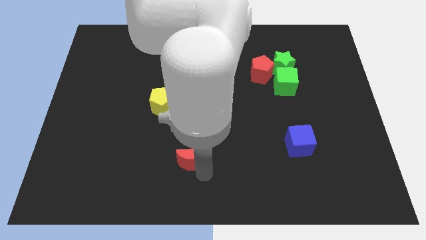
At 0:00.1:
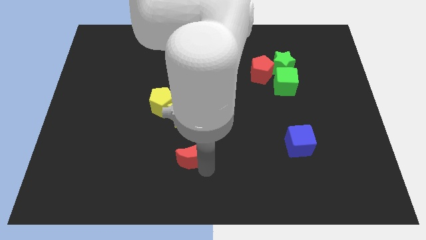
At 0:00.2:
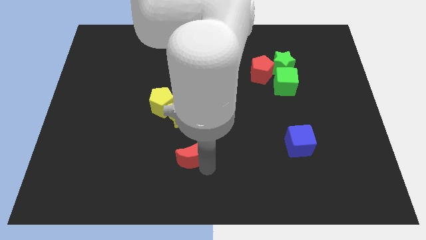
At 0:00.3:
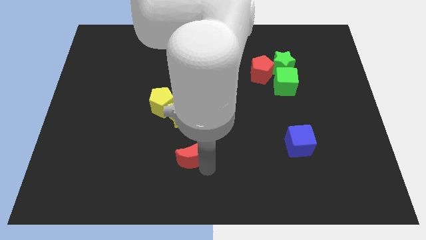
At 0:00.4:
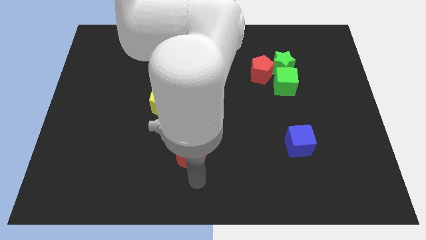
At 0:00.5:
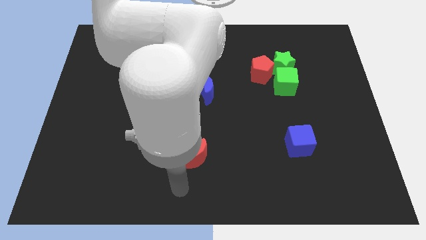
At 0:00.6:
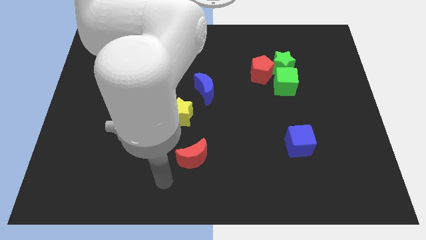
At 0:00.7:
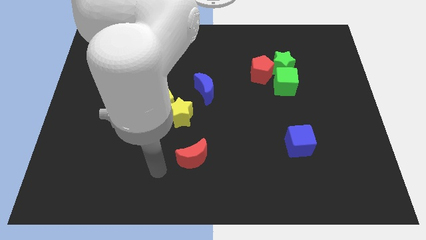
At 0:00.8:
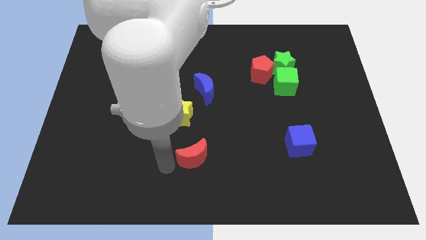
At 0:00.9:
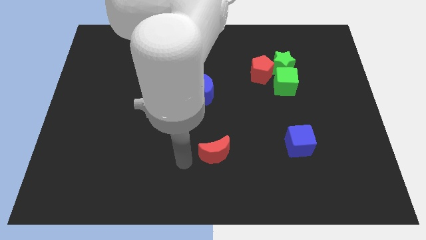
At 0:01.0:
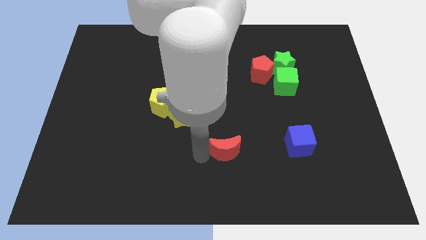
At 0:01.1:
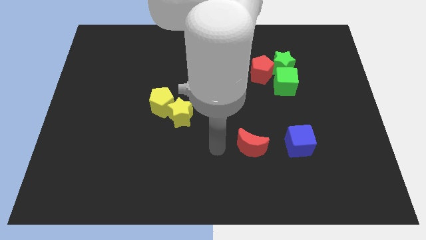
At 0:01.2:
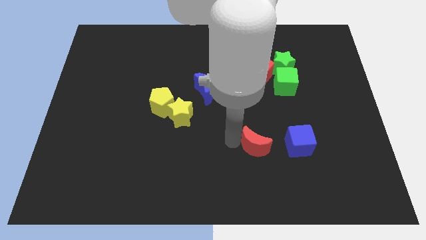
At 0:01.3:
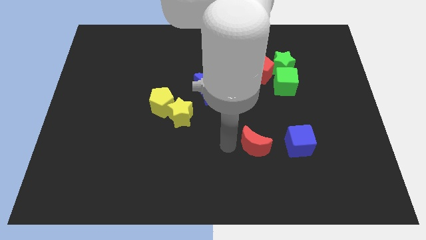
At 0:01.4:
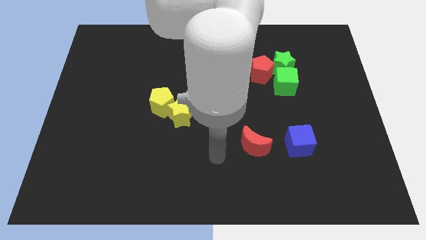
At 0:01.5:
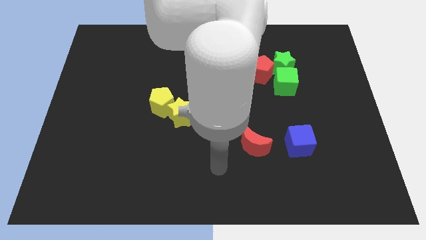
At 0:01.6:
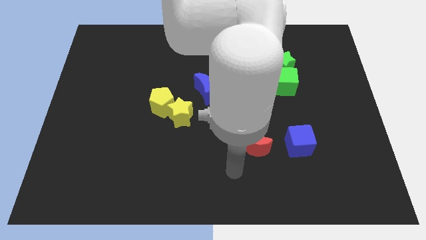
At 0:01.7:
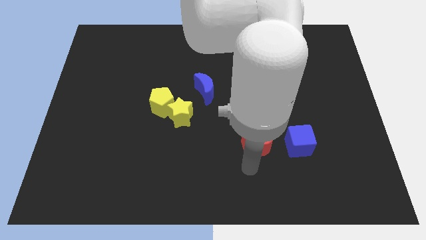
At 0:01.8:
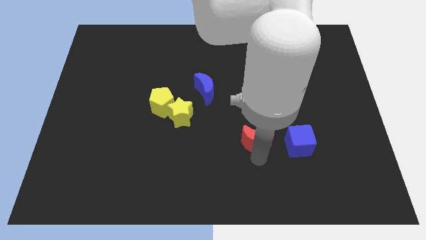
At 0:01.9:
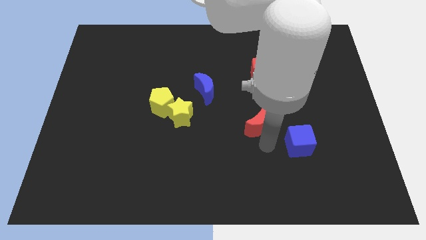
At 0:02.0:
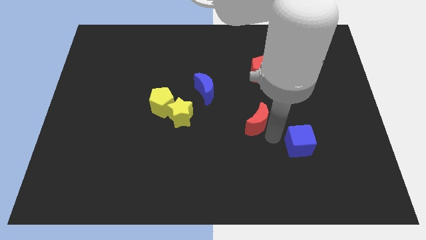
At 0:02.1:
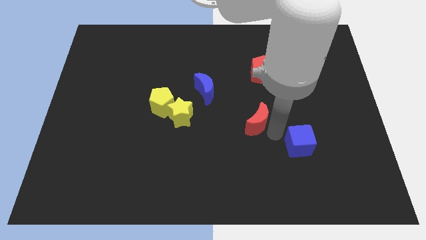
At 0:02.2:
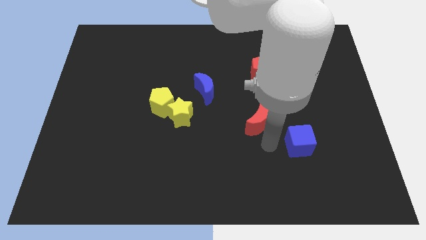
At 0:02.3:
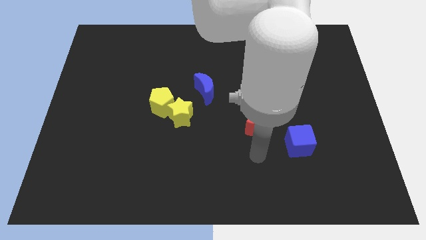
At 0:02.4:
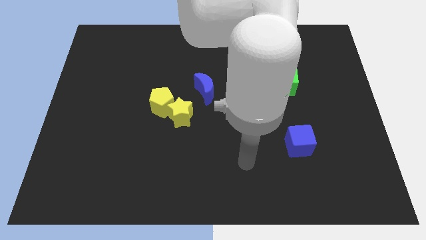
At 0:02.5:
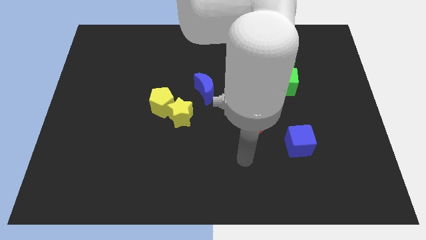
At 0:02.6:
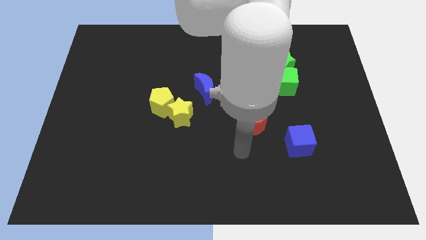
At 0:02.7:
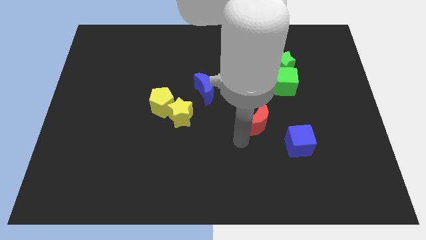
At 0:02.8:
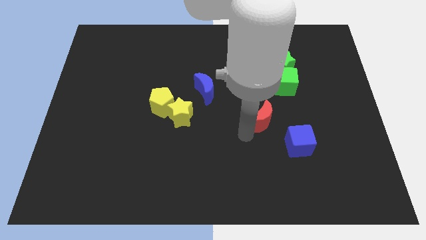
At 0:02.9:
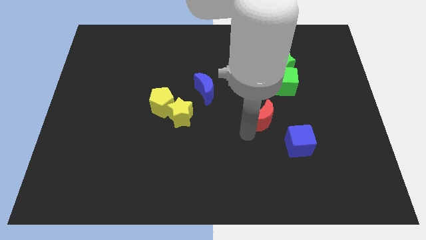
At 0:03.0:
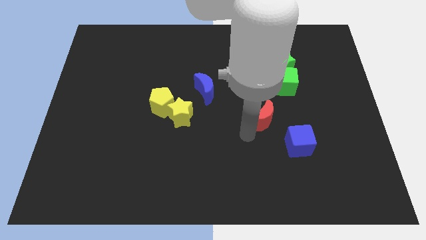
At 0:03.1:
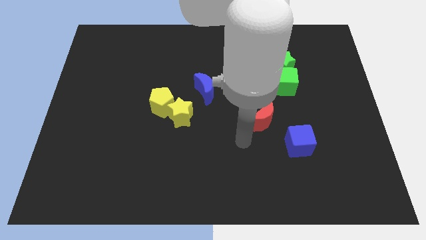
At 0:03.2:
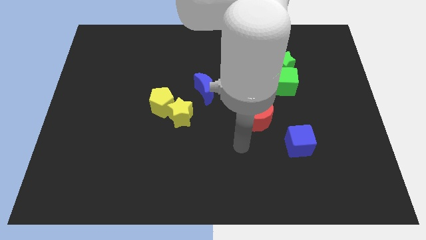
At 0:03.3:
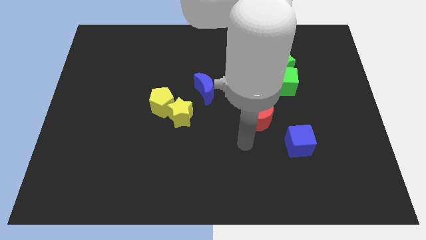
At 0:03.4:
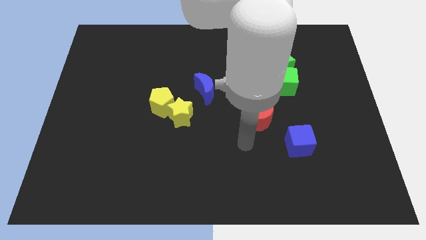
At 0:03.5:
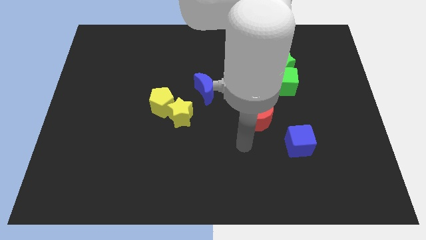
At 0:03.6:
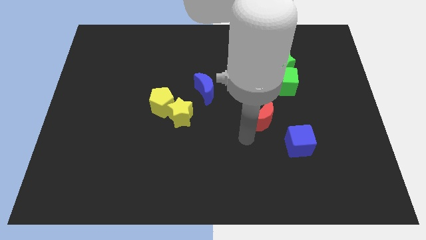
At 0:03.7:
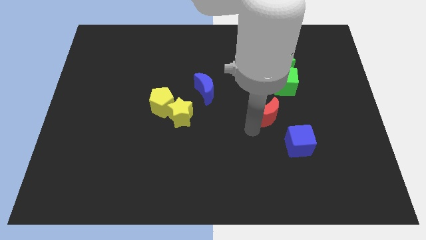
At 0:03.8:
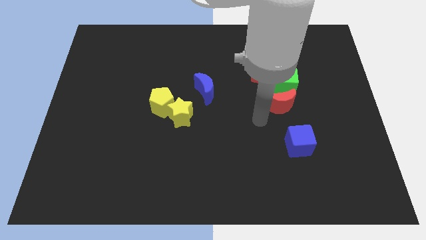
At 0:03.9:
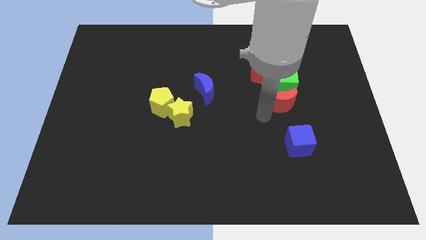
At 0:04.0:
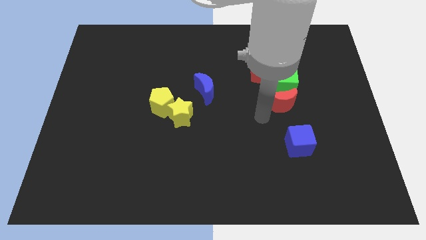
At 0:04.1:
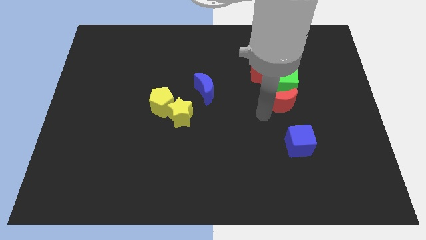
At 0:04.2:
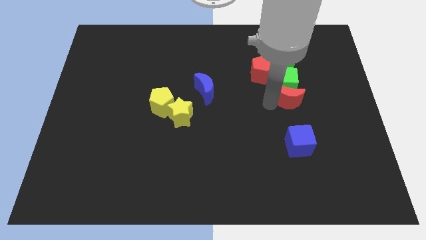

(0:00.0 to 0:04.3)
push the red moon in to the green cube

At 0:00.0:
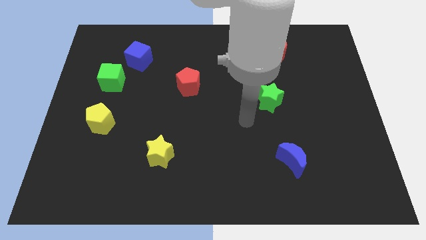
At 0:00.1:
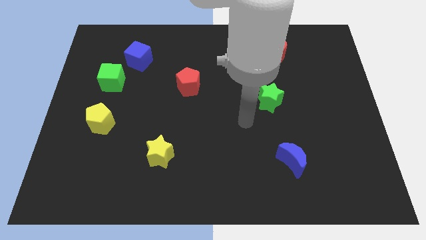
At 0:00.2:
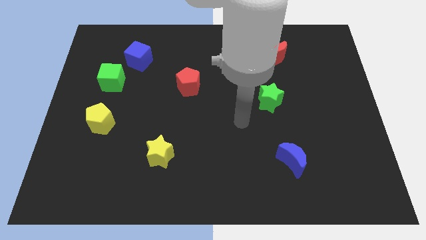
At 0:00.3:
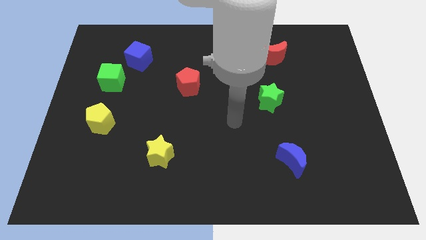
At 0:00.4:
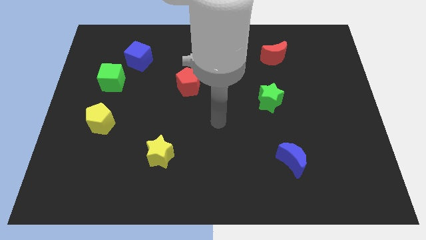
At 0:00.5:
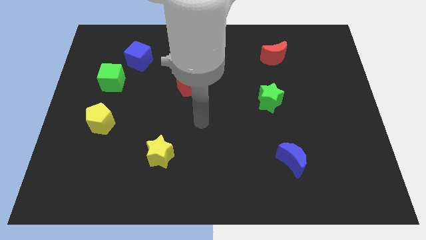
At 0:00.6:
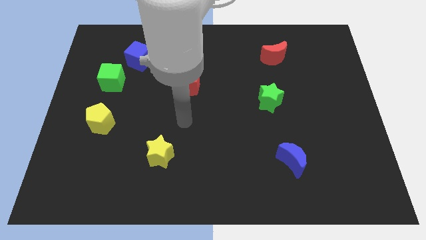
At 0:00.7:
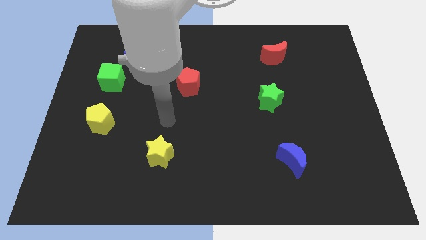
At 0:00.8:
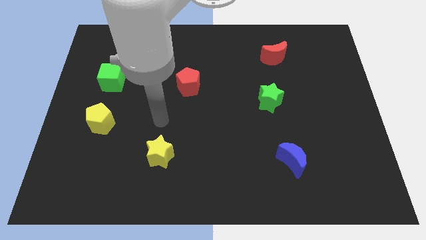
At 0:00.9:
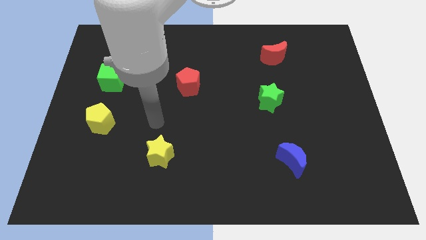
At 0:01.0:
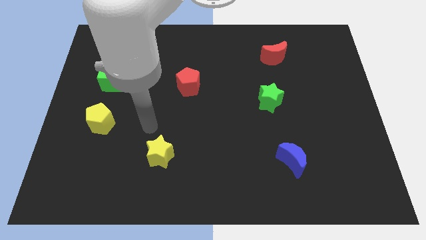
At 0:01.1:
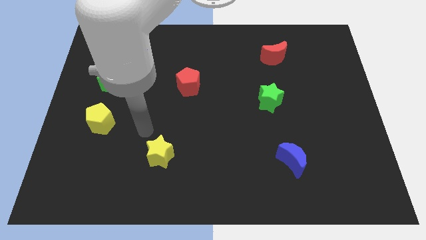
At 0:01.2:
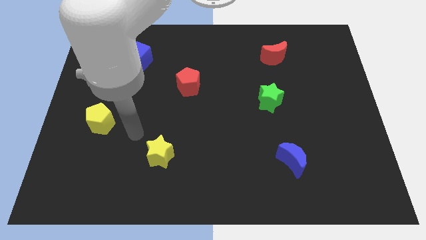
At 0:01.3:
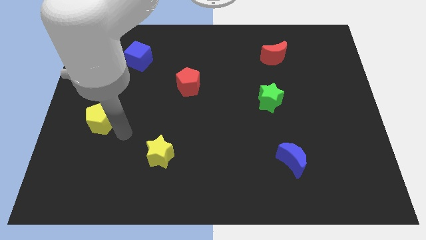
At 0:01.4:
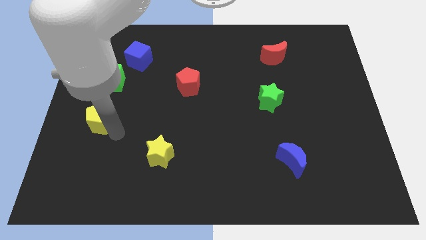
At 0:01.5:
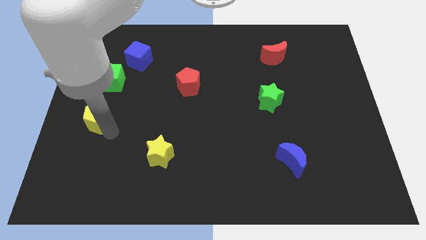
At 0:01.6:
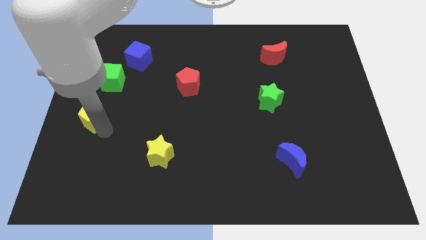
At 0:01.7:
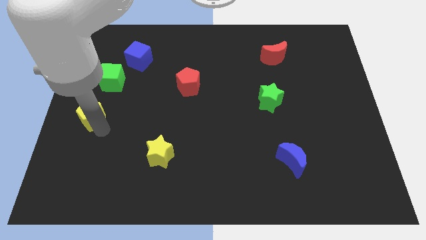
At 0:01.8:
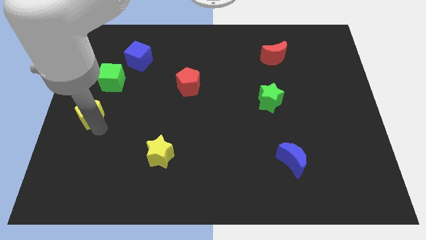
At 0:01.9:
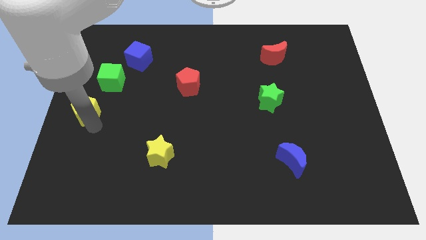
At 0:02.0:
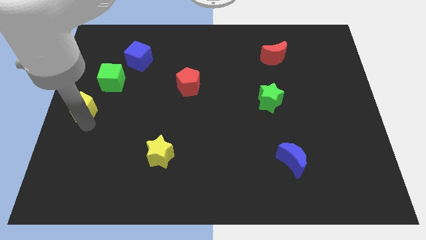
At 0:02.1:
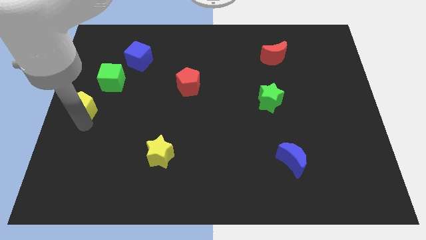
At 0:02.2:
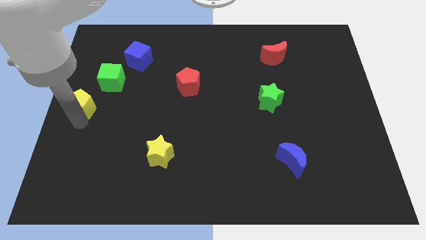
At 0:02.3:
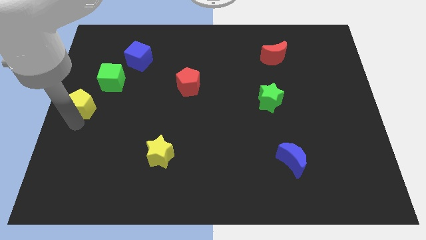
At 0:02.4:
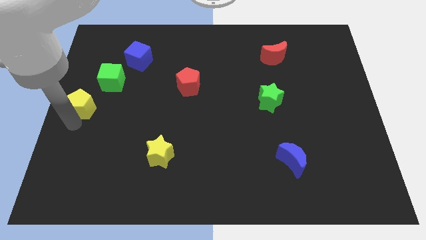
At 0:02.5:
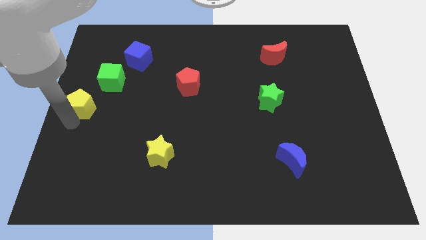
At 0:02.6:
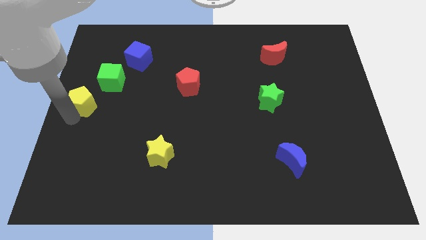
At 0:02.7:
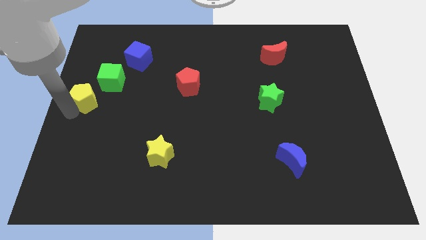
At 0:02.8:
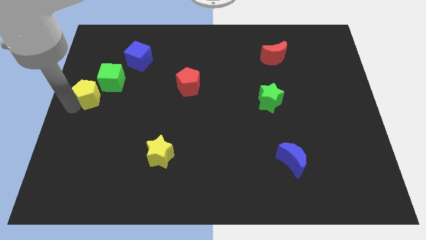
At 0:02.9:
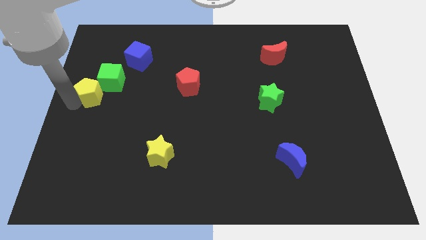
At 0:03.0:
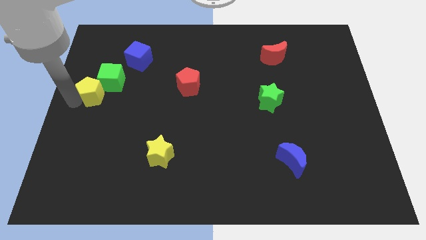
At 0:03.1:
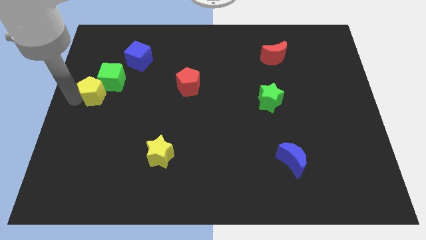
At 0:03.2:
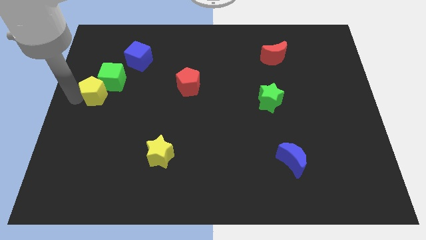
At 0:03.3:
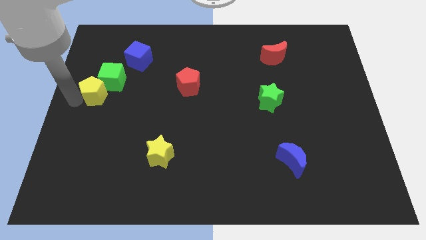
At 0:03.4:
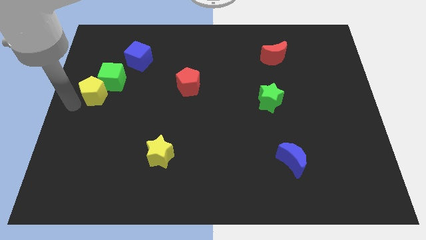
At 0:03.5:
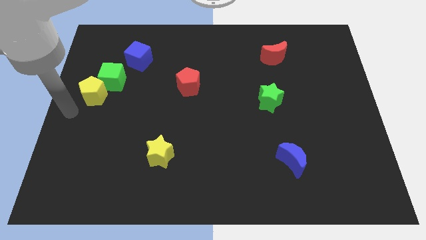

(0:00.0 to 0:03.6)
move the yellow pentagon into the green cube

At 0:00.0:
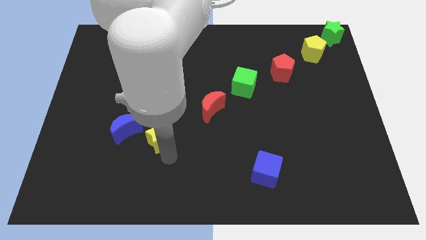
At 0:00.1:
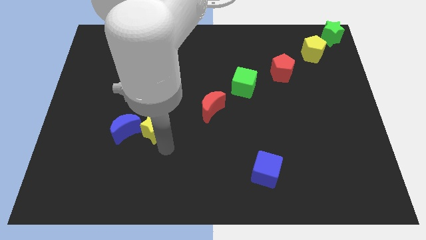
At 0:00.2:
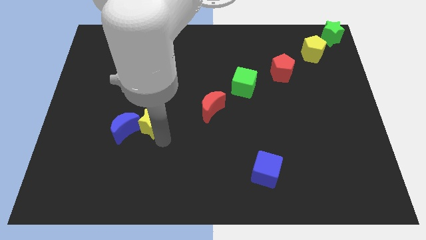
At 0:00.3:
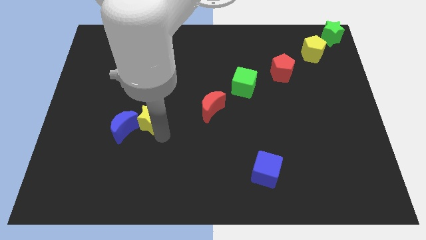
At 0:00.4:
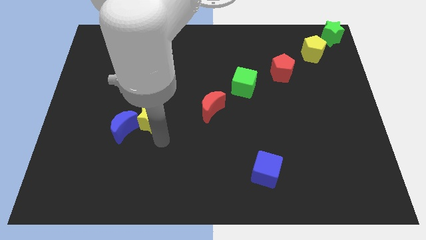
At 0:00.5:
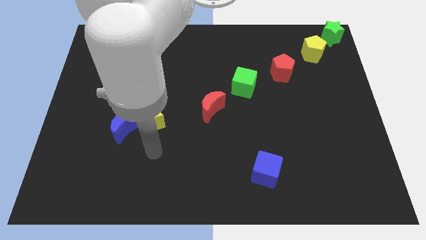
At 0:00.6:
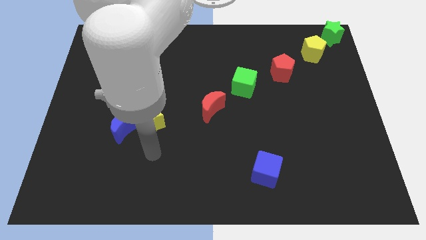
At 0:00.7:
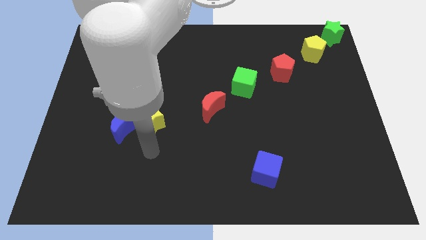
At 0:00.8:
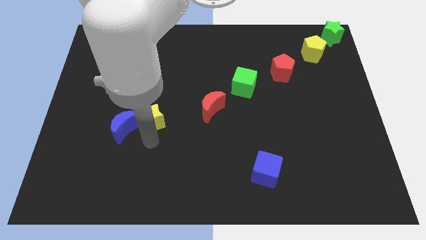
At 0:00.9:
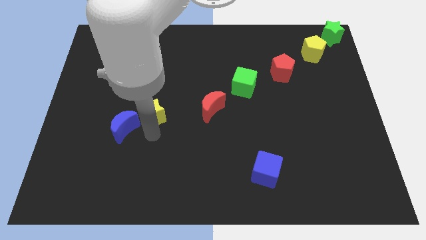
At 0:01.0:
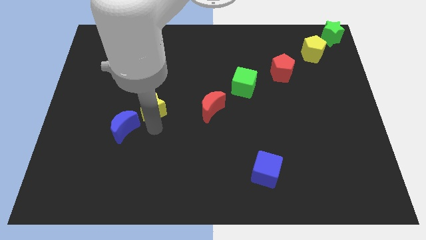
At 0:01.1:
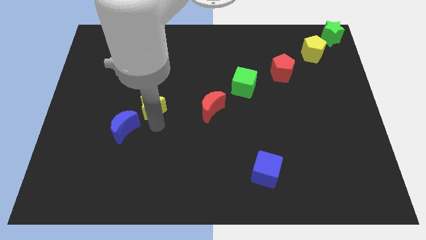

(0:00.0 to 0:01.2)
push yellow star slight towards up
